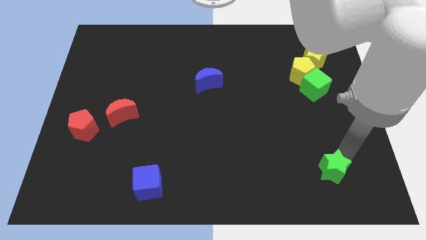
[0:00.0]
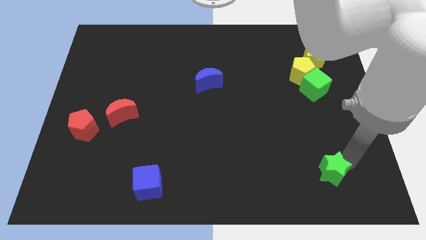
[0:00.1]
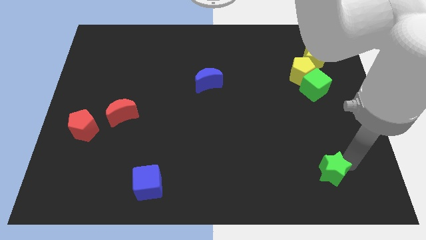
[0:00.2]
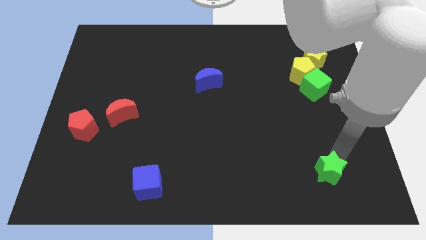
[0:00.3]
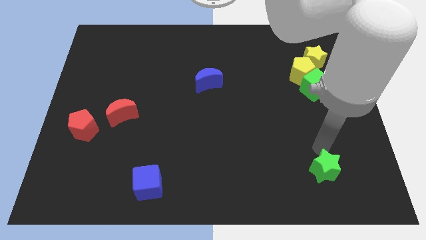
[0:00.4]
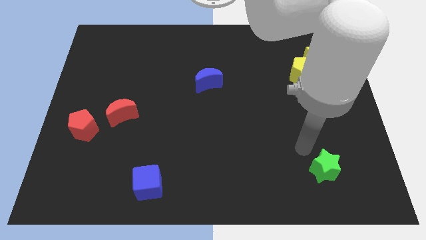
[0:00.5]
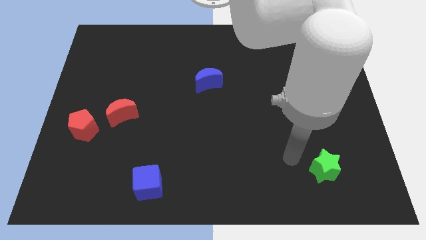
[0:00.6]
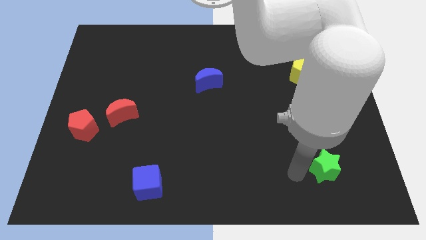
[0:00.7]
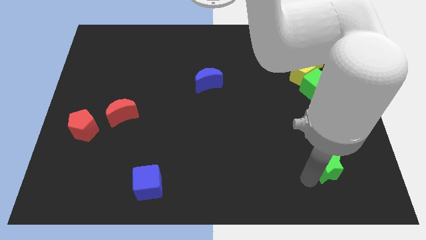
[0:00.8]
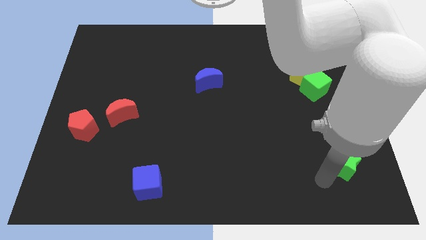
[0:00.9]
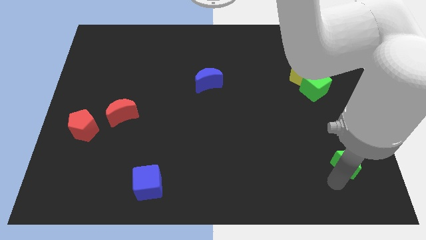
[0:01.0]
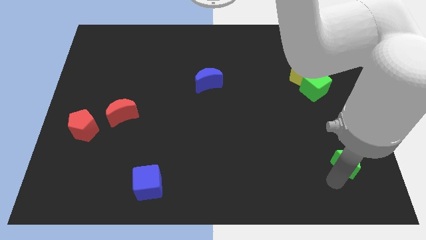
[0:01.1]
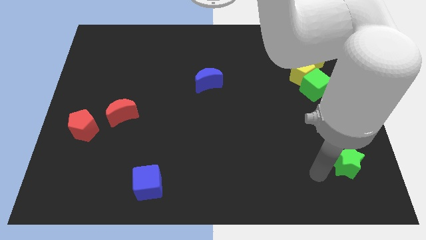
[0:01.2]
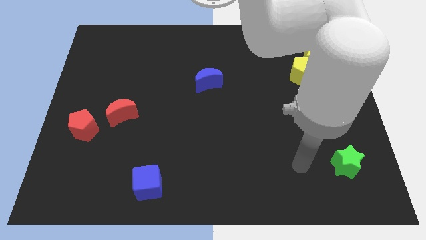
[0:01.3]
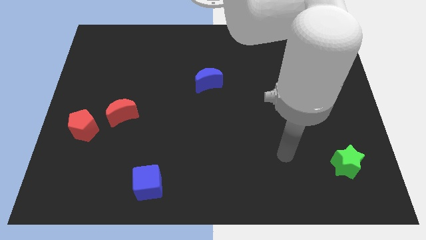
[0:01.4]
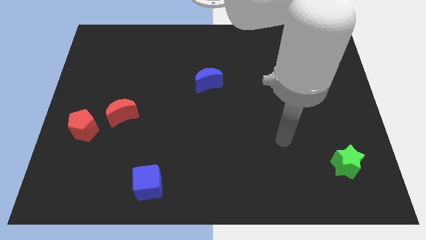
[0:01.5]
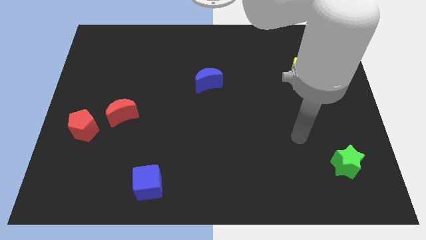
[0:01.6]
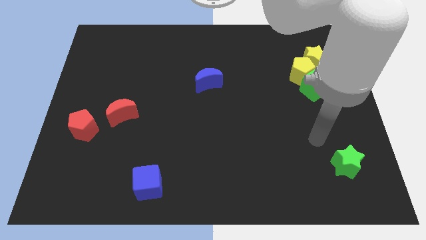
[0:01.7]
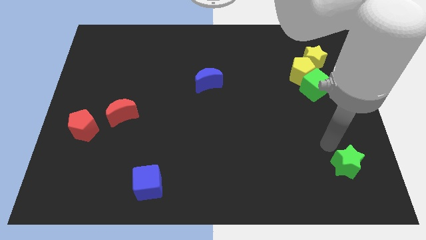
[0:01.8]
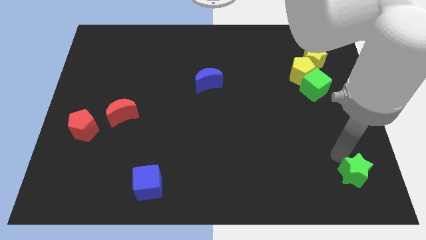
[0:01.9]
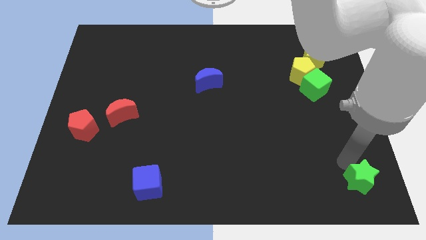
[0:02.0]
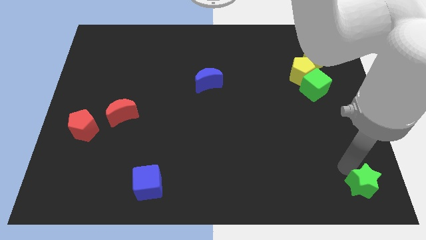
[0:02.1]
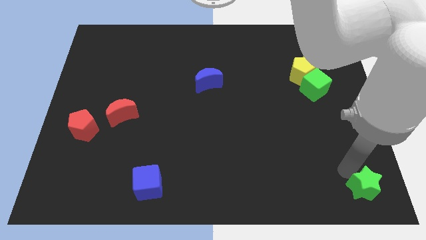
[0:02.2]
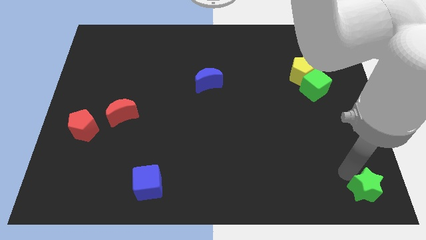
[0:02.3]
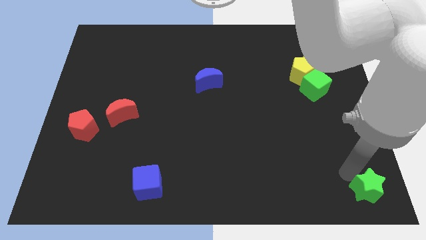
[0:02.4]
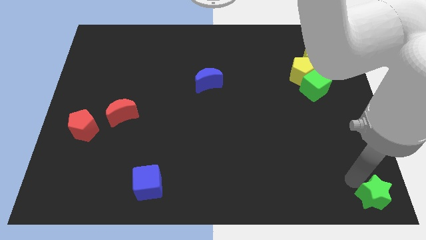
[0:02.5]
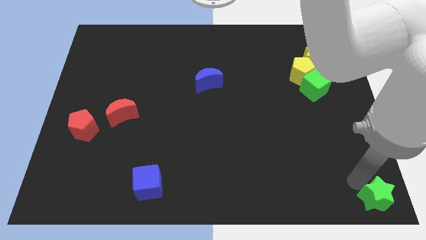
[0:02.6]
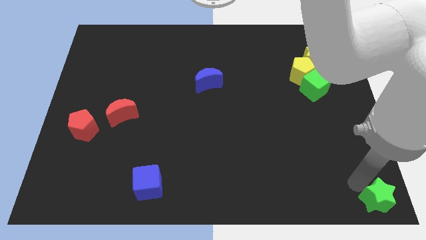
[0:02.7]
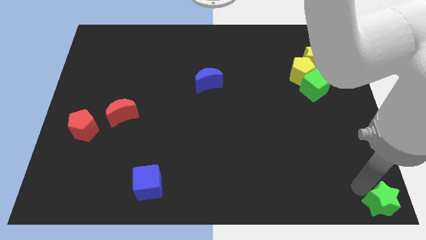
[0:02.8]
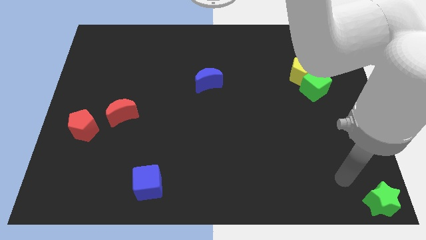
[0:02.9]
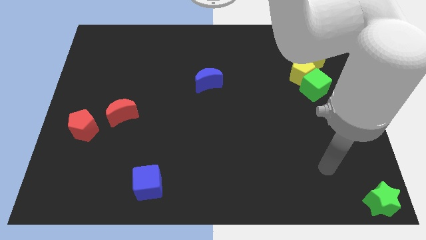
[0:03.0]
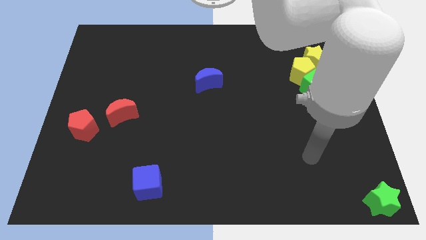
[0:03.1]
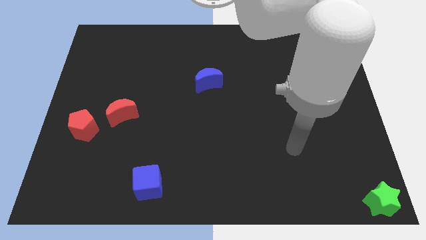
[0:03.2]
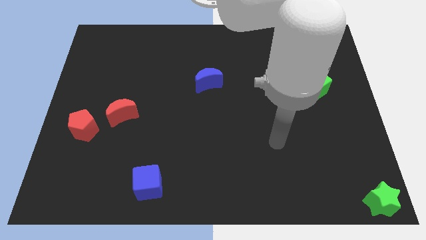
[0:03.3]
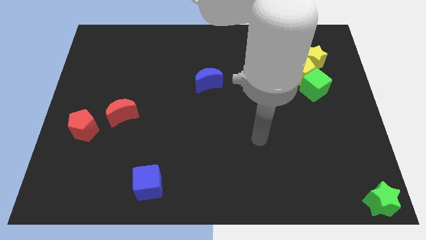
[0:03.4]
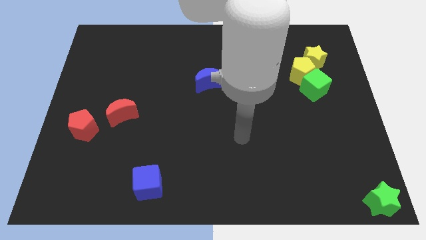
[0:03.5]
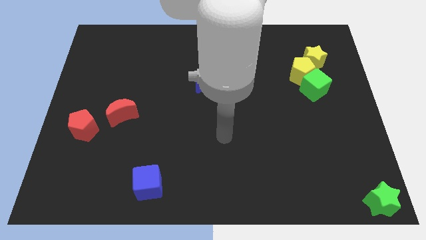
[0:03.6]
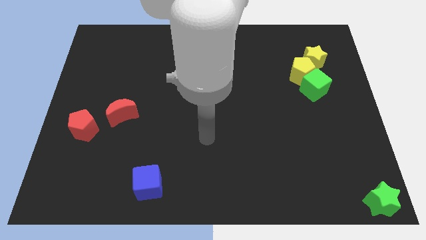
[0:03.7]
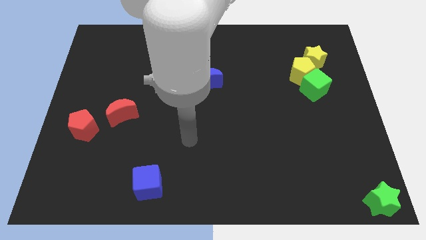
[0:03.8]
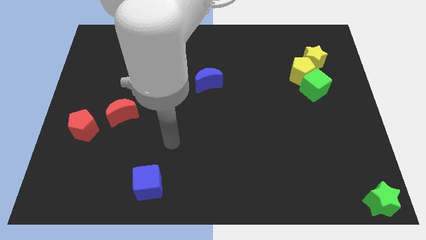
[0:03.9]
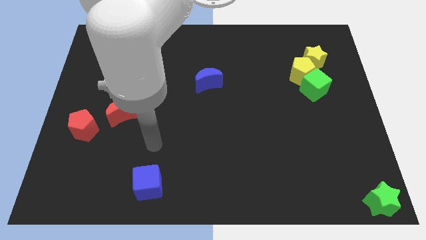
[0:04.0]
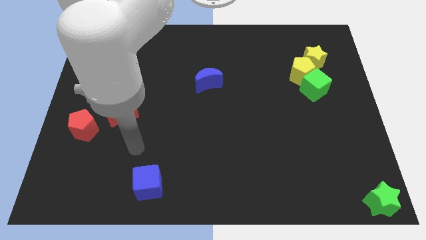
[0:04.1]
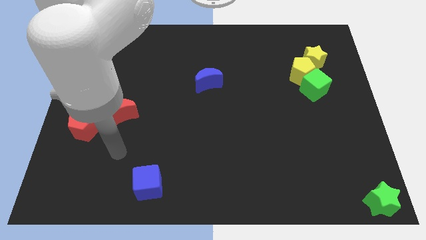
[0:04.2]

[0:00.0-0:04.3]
push the green star towards the bottom right corner of the board

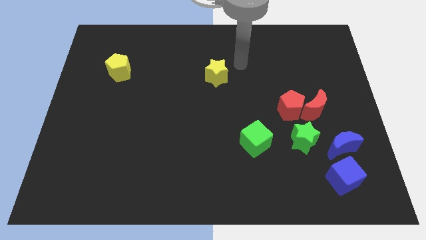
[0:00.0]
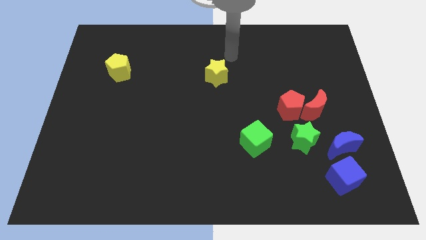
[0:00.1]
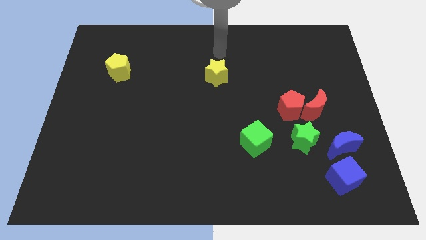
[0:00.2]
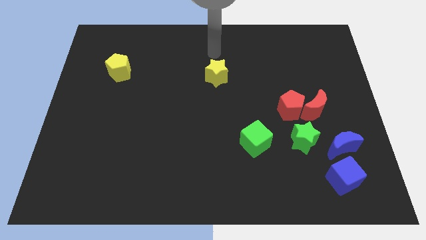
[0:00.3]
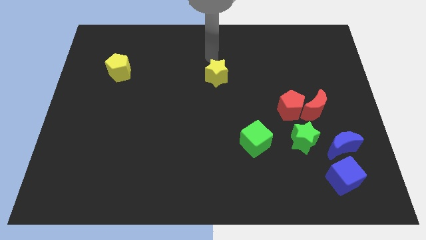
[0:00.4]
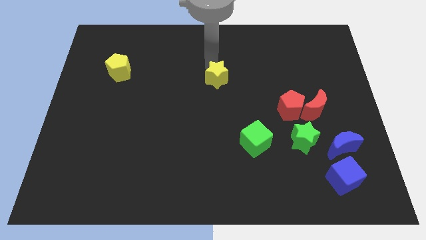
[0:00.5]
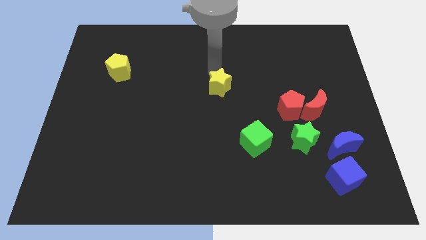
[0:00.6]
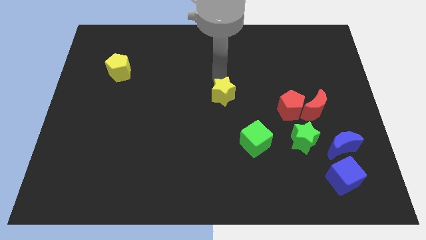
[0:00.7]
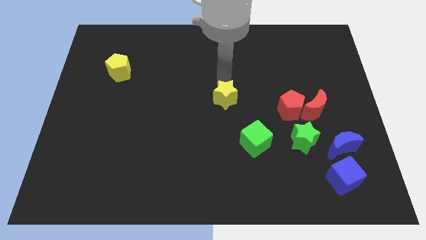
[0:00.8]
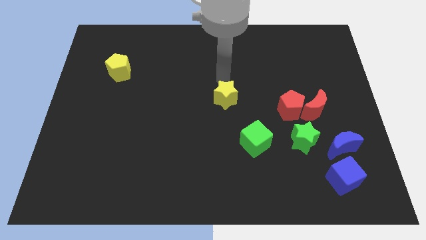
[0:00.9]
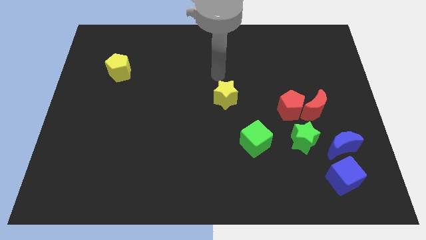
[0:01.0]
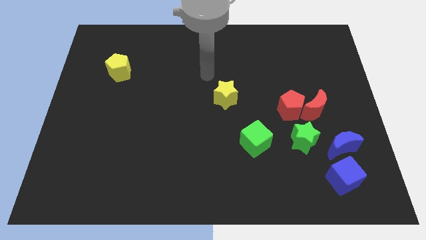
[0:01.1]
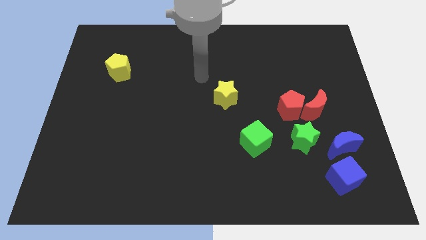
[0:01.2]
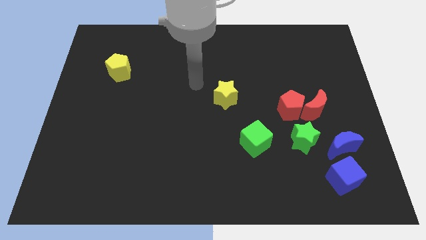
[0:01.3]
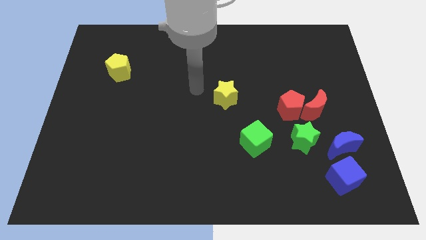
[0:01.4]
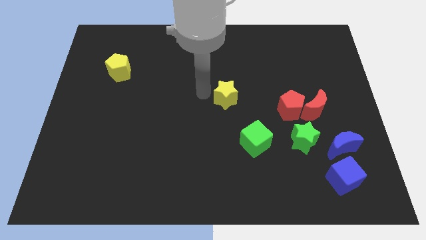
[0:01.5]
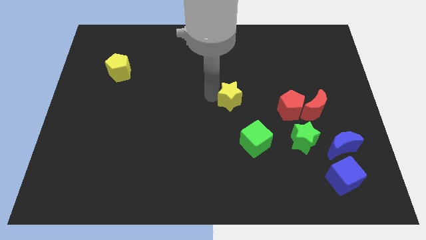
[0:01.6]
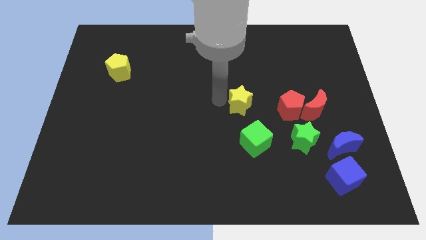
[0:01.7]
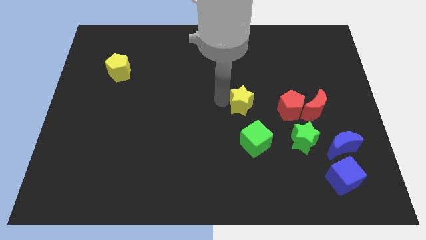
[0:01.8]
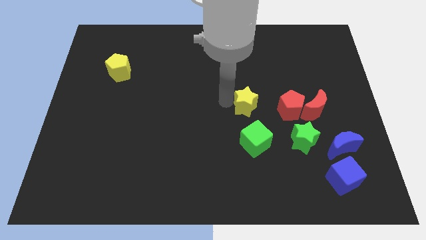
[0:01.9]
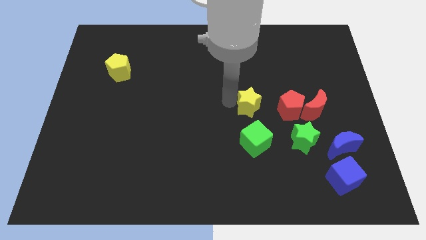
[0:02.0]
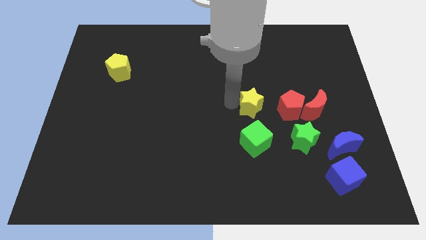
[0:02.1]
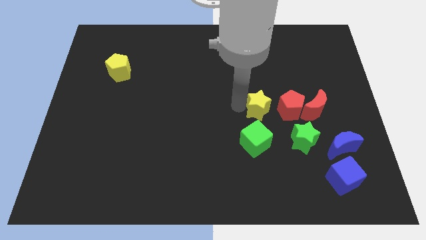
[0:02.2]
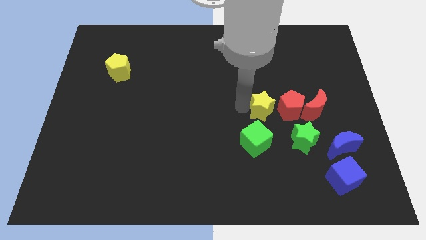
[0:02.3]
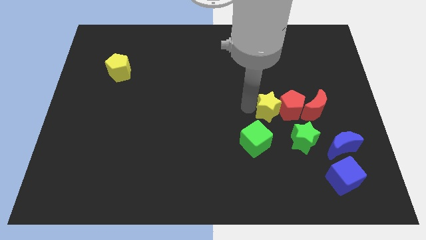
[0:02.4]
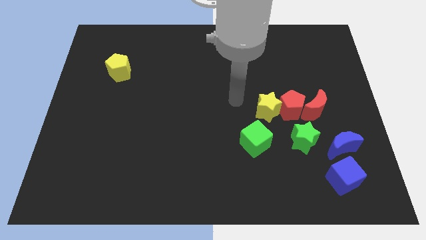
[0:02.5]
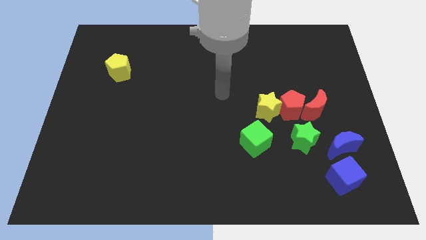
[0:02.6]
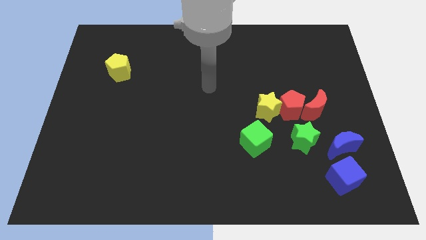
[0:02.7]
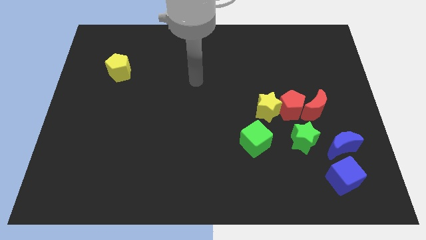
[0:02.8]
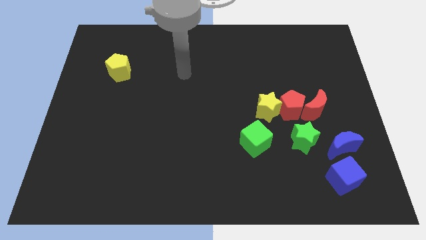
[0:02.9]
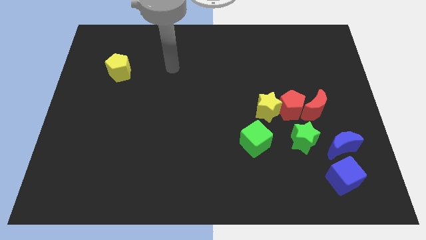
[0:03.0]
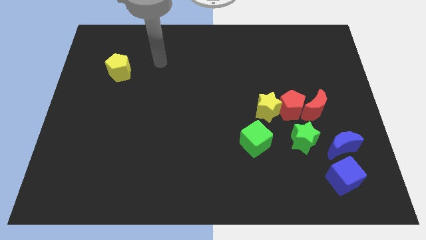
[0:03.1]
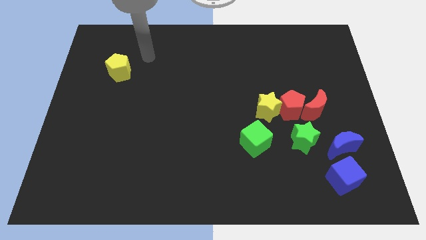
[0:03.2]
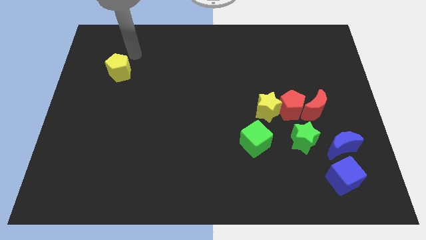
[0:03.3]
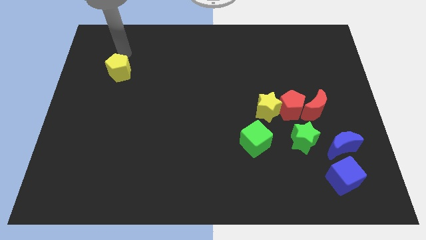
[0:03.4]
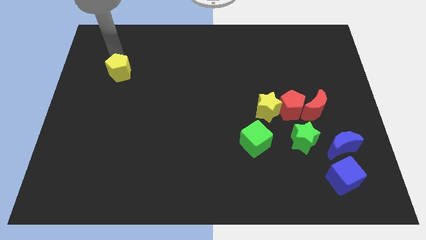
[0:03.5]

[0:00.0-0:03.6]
place the yellow pentagon to the left side of yellow star

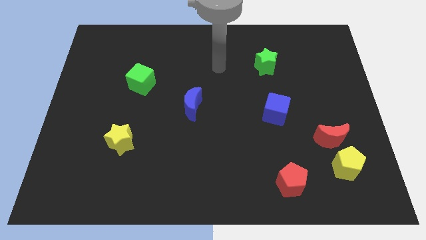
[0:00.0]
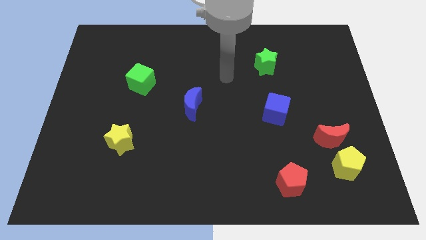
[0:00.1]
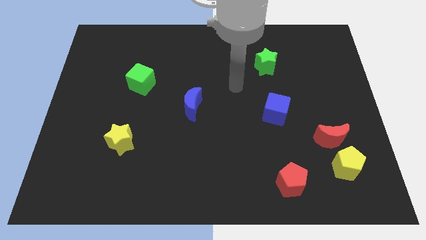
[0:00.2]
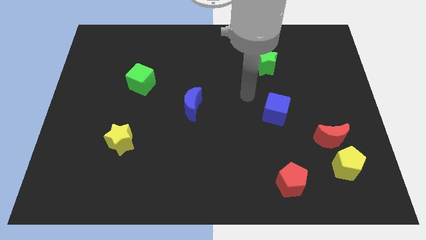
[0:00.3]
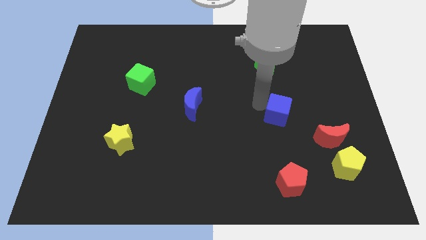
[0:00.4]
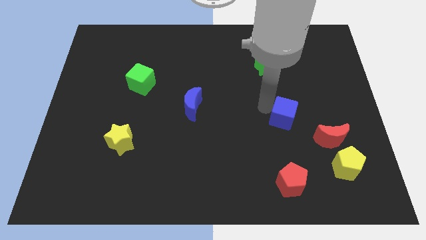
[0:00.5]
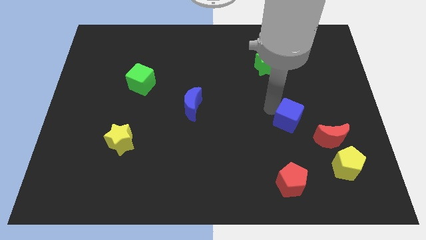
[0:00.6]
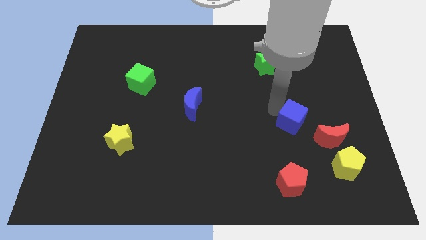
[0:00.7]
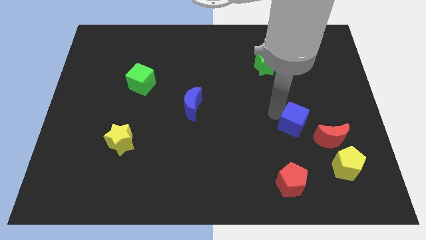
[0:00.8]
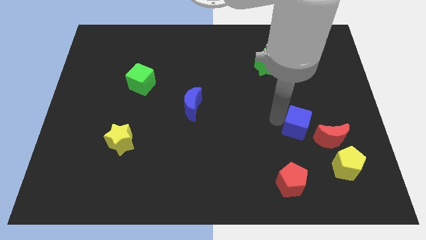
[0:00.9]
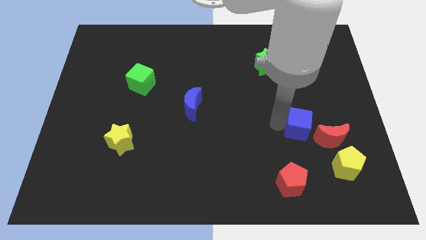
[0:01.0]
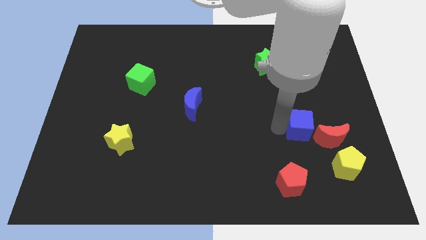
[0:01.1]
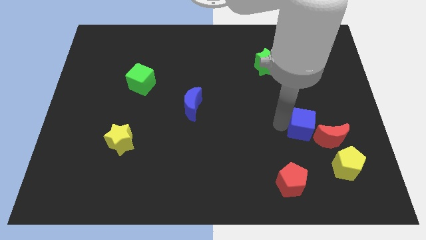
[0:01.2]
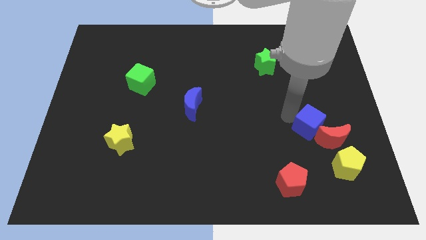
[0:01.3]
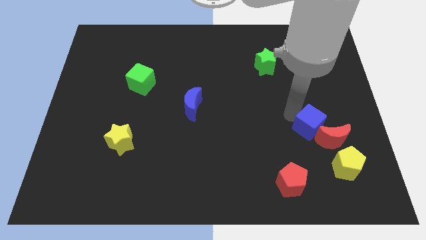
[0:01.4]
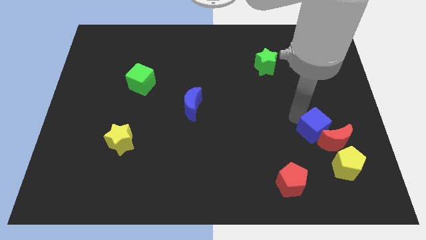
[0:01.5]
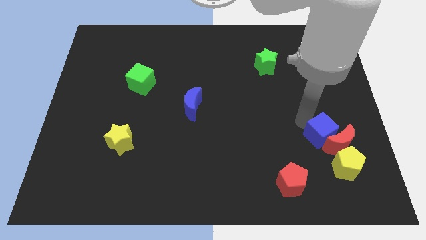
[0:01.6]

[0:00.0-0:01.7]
push the blue cube into the red crescent
